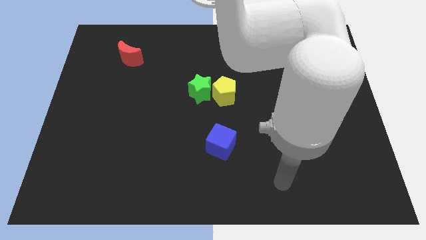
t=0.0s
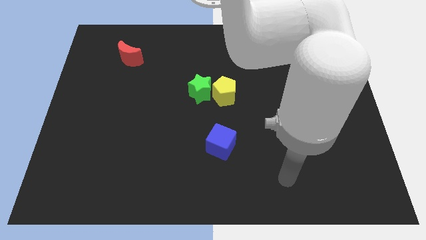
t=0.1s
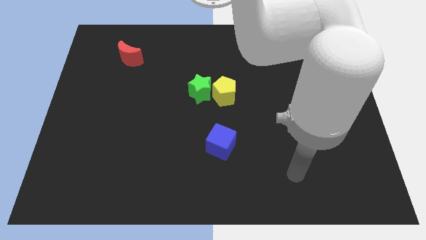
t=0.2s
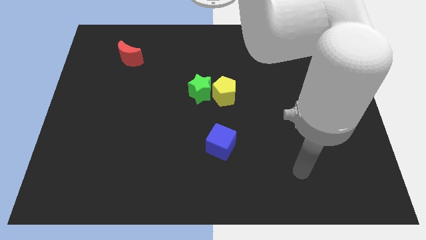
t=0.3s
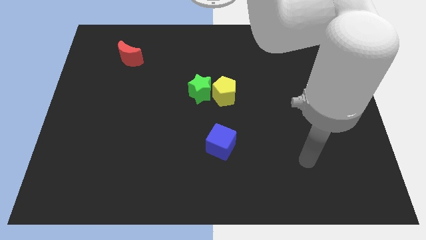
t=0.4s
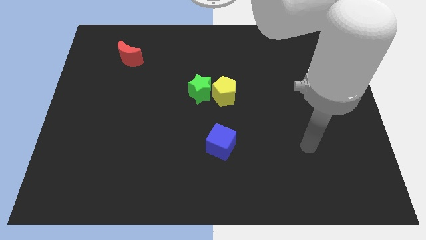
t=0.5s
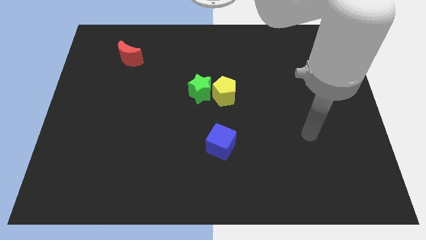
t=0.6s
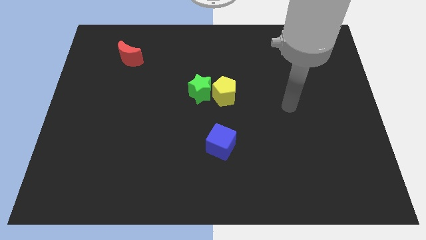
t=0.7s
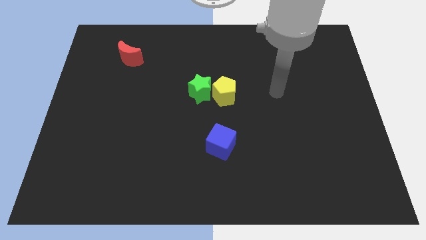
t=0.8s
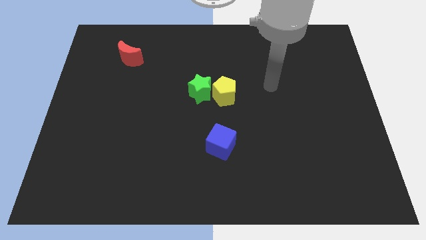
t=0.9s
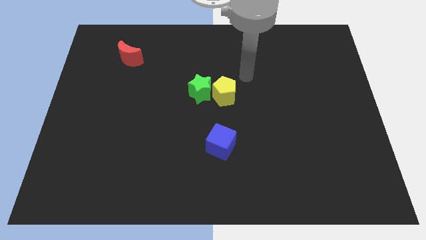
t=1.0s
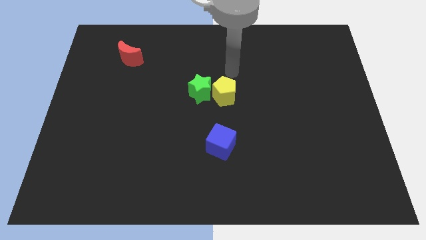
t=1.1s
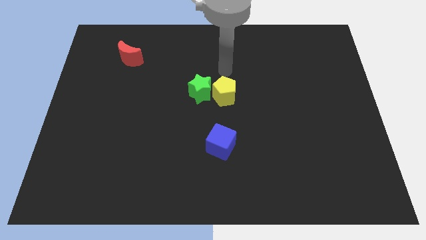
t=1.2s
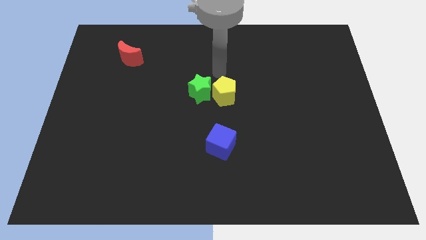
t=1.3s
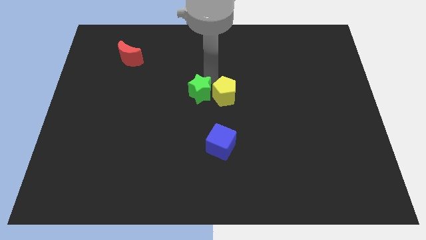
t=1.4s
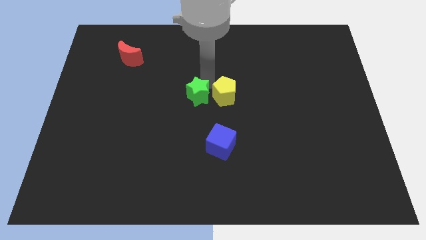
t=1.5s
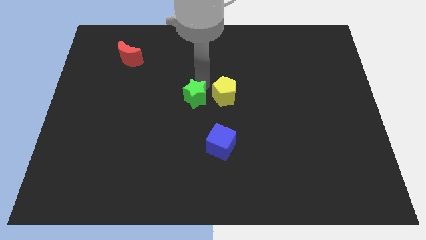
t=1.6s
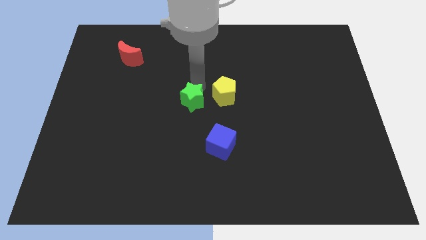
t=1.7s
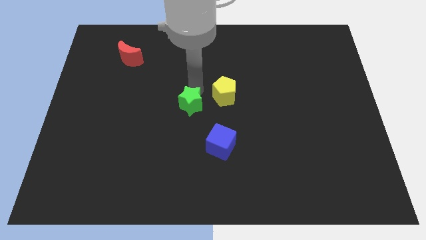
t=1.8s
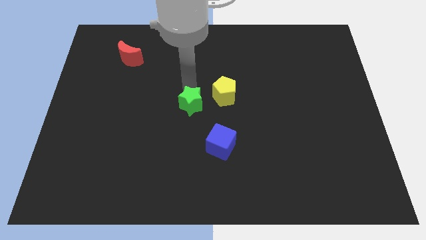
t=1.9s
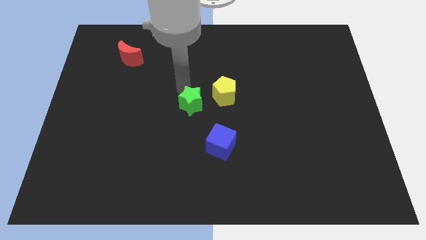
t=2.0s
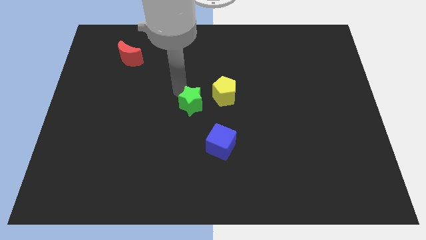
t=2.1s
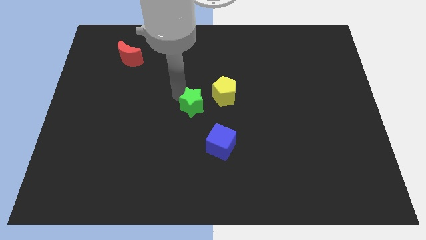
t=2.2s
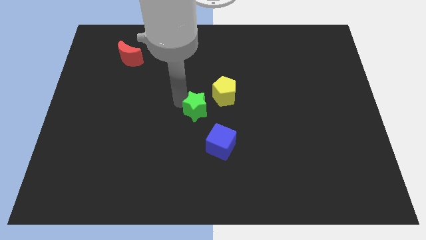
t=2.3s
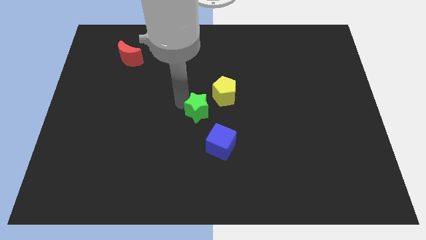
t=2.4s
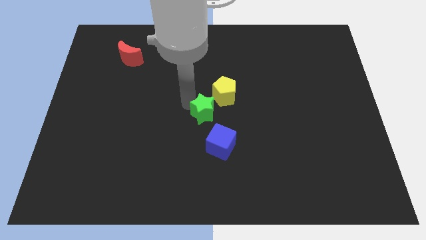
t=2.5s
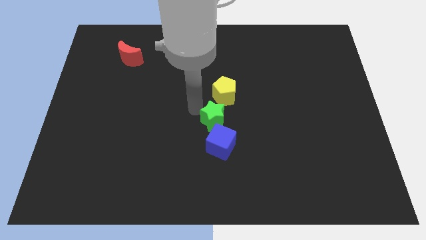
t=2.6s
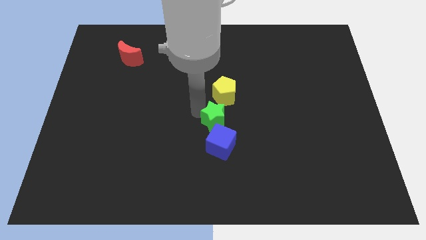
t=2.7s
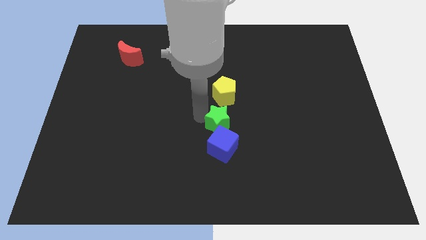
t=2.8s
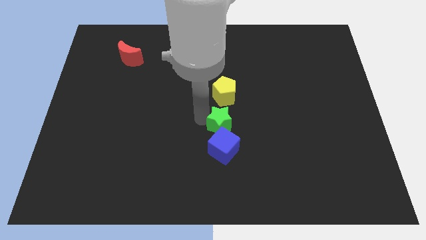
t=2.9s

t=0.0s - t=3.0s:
put the green star next to the cube

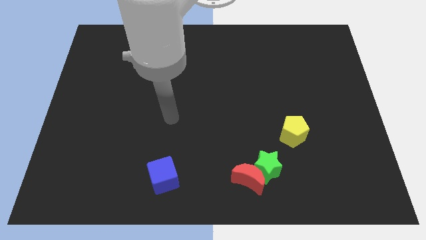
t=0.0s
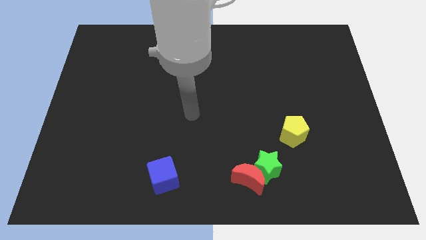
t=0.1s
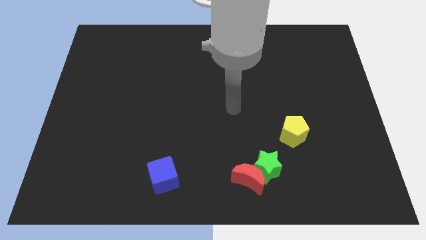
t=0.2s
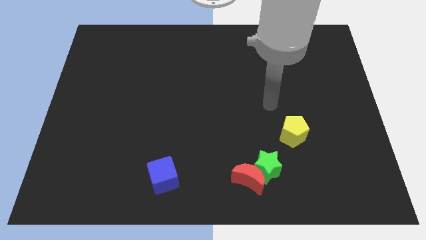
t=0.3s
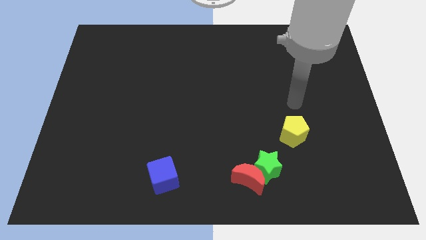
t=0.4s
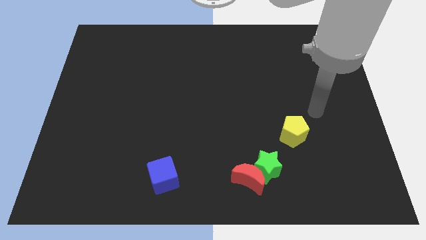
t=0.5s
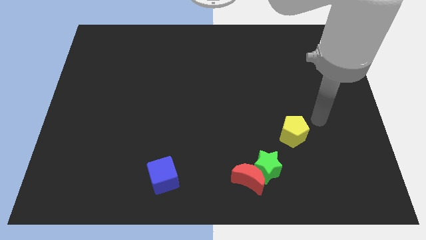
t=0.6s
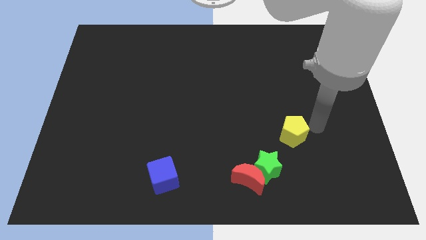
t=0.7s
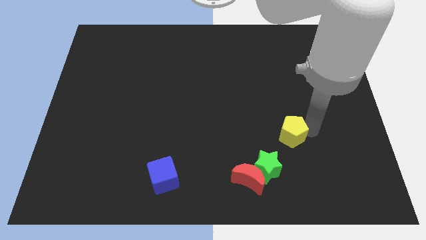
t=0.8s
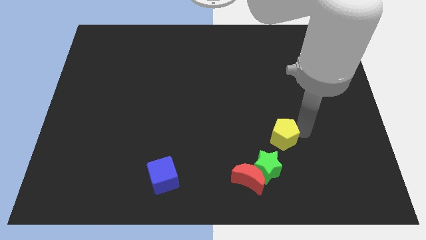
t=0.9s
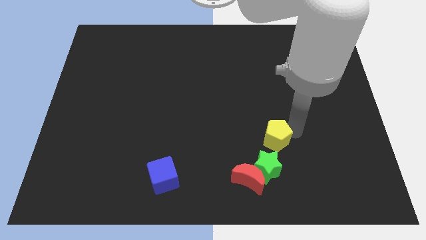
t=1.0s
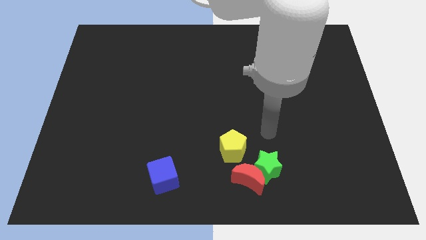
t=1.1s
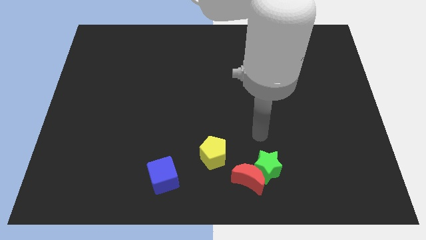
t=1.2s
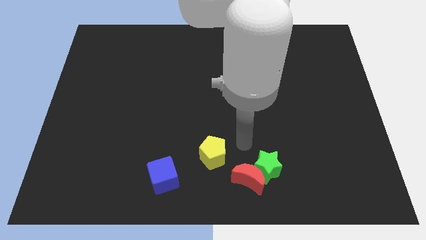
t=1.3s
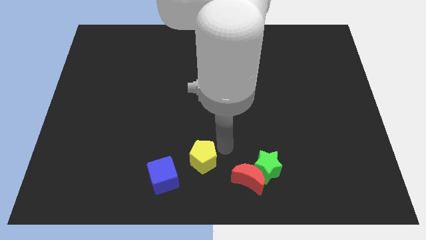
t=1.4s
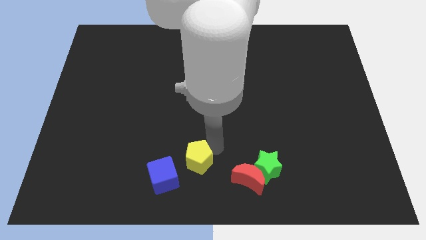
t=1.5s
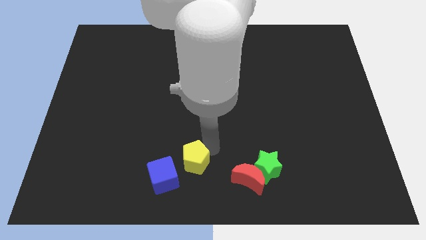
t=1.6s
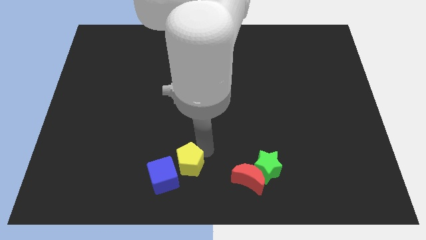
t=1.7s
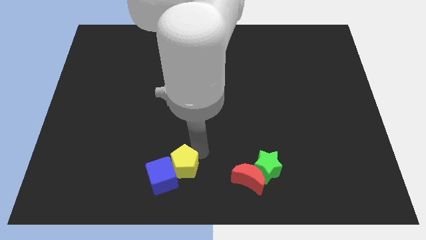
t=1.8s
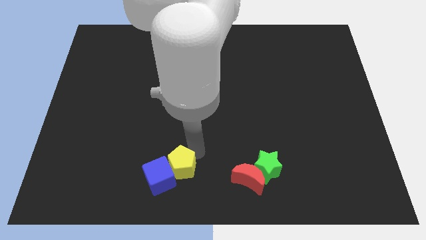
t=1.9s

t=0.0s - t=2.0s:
slide the yellow pentagon close to the cube

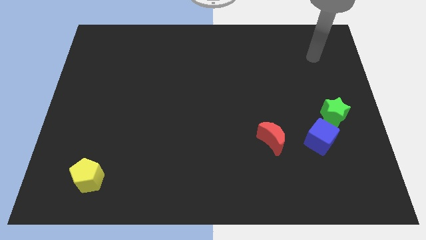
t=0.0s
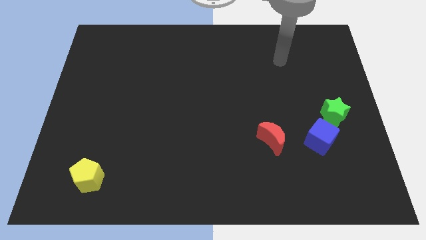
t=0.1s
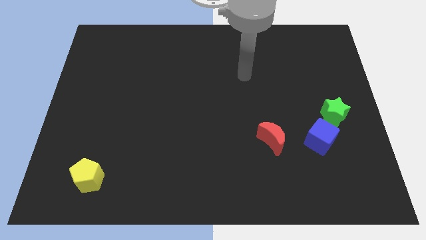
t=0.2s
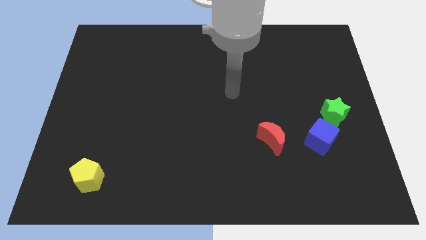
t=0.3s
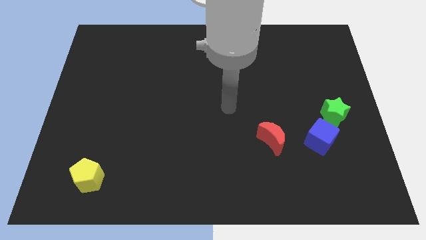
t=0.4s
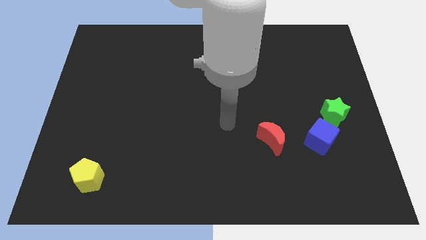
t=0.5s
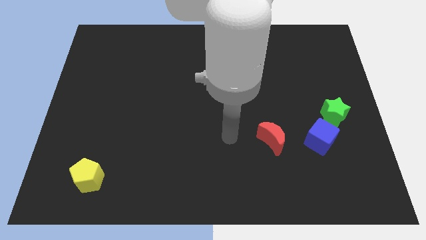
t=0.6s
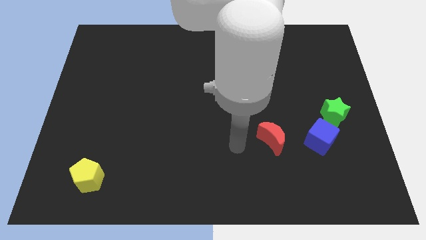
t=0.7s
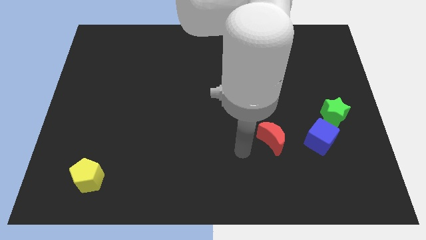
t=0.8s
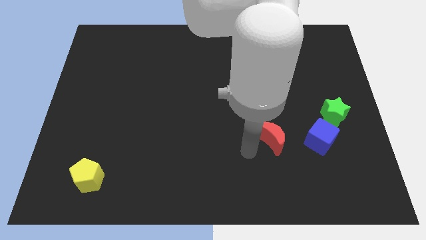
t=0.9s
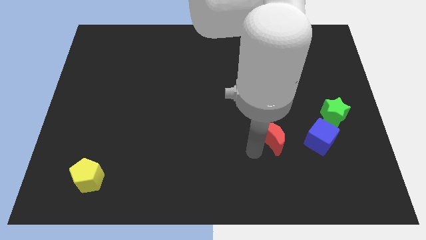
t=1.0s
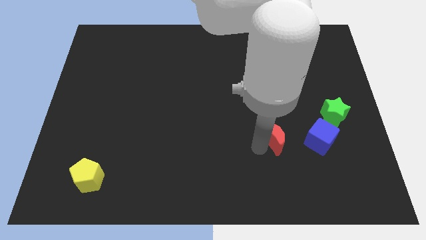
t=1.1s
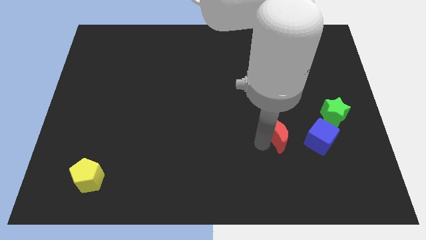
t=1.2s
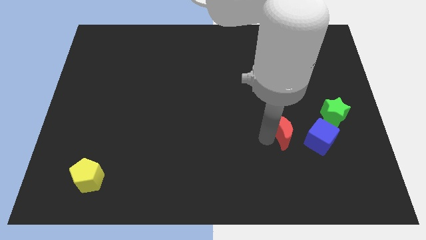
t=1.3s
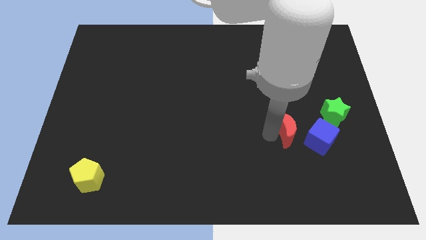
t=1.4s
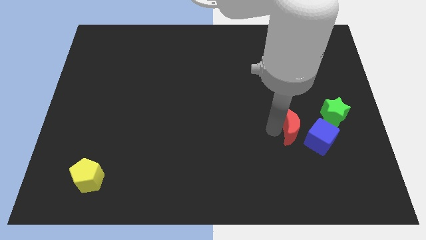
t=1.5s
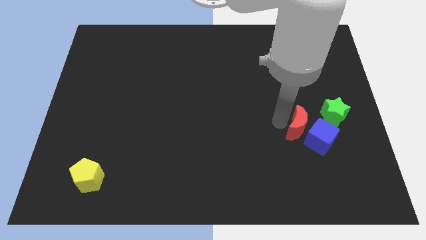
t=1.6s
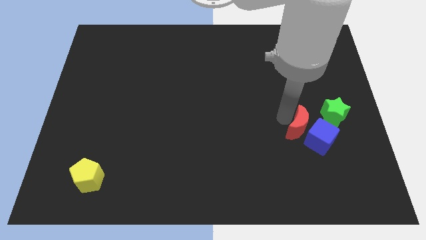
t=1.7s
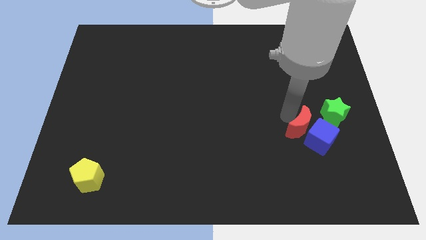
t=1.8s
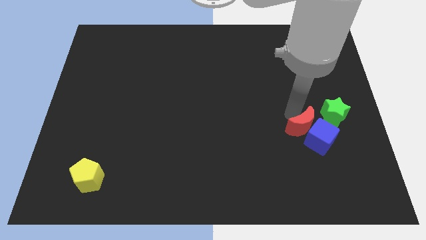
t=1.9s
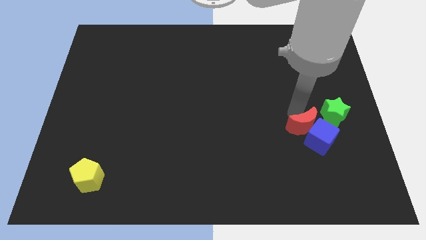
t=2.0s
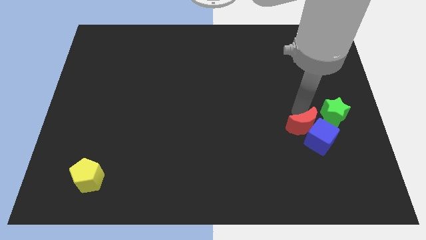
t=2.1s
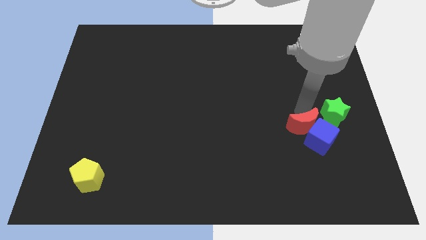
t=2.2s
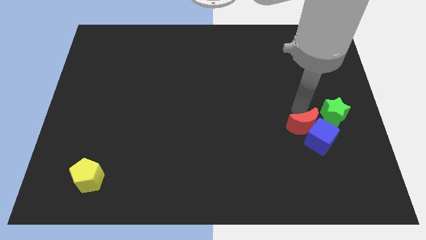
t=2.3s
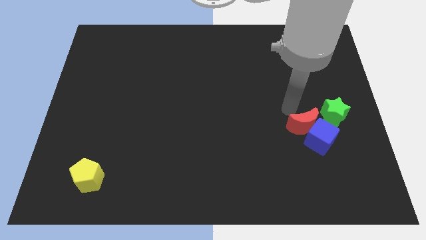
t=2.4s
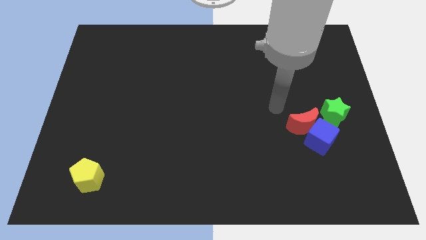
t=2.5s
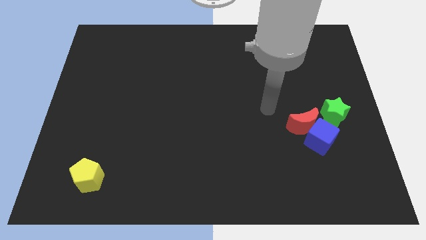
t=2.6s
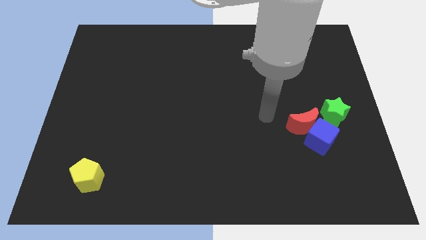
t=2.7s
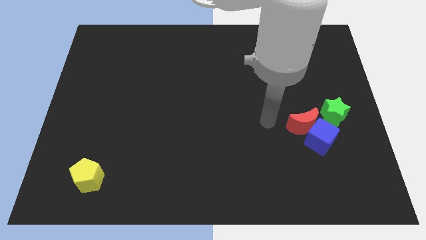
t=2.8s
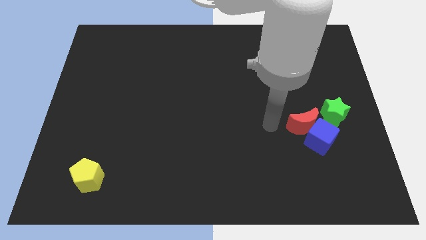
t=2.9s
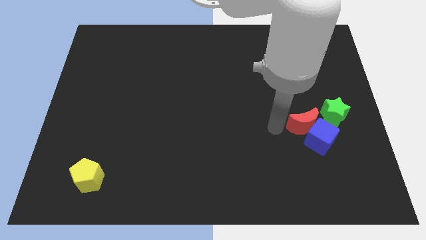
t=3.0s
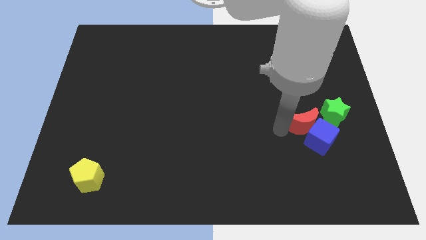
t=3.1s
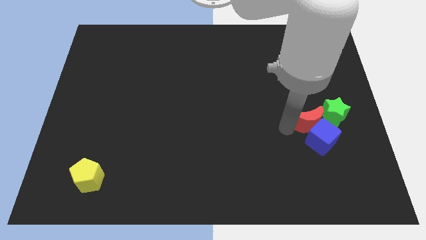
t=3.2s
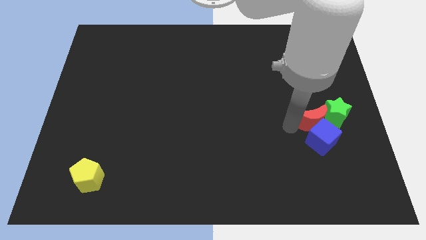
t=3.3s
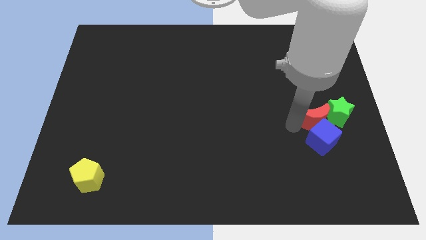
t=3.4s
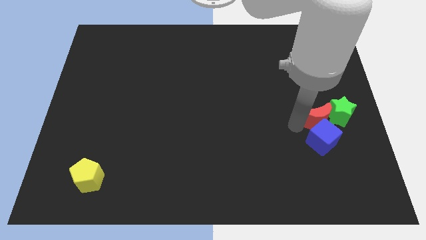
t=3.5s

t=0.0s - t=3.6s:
slide the red moon close to the green star
